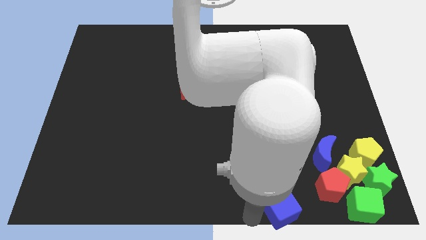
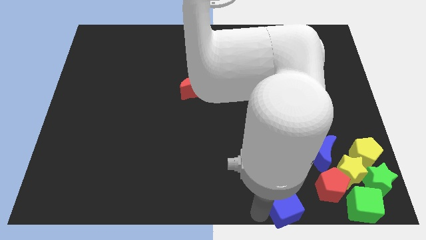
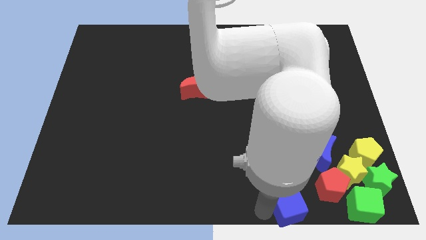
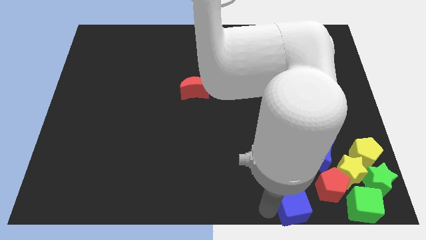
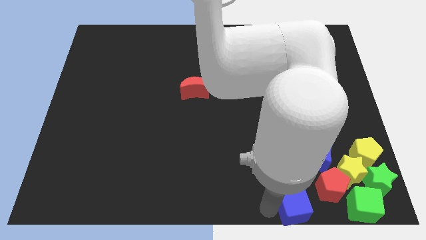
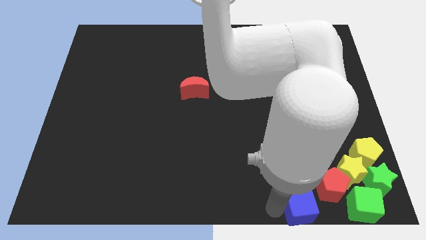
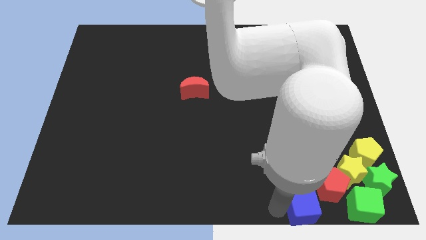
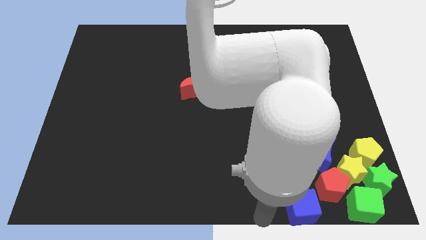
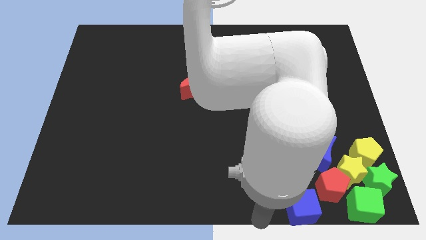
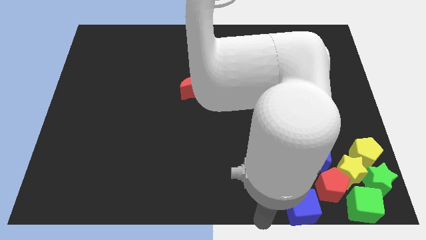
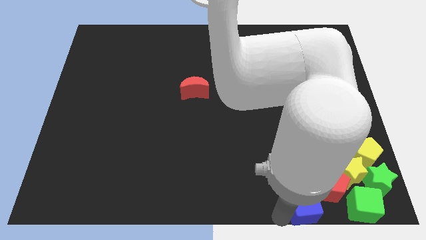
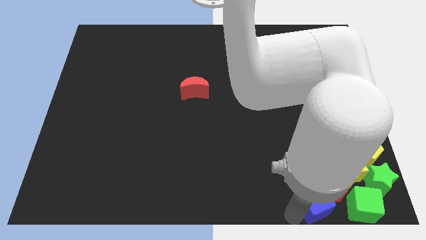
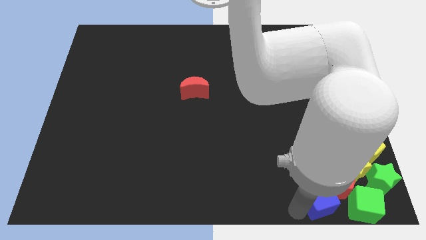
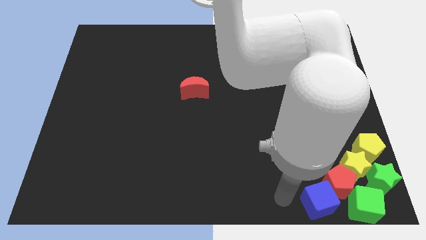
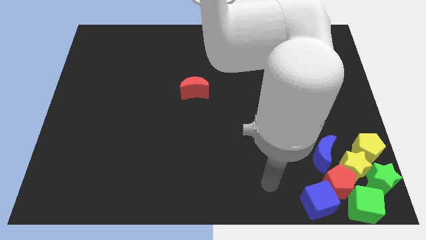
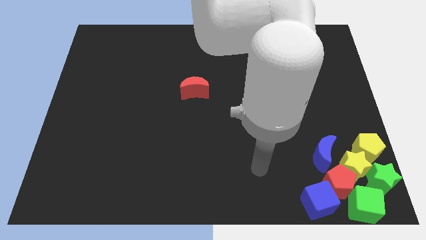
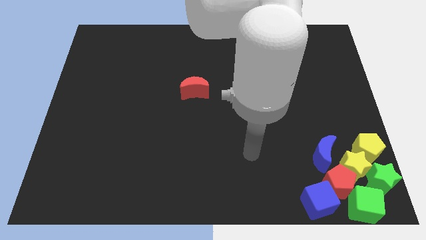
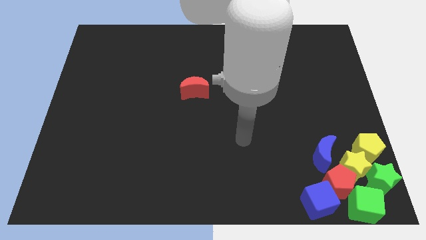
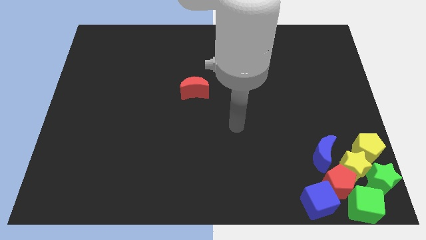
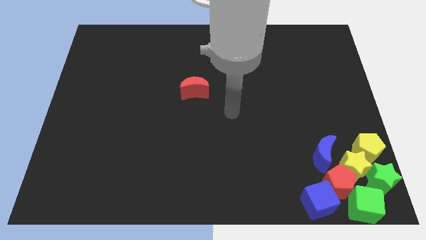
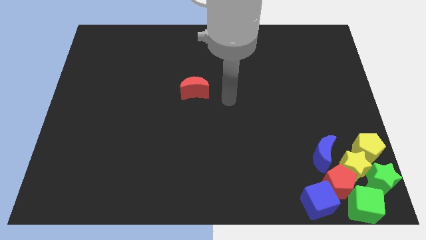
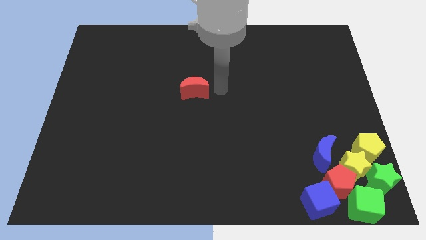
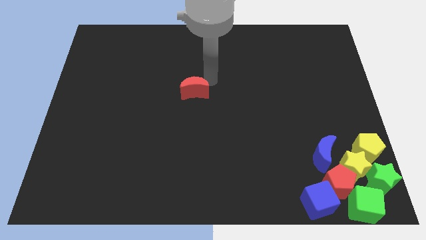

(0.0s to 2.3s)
move blue block close to red pentagon

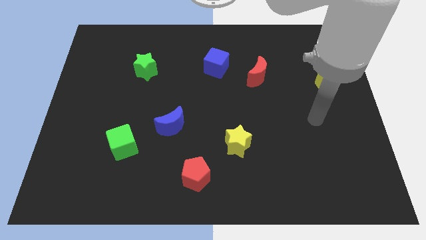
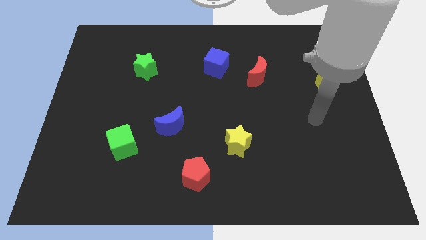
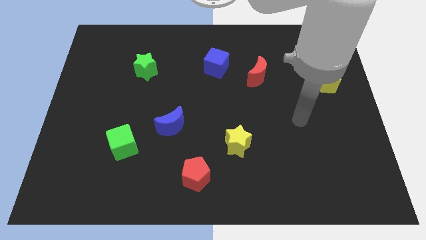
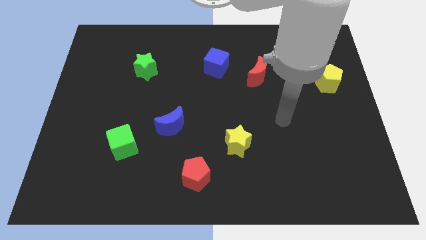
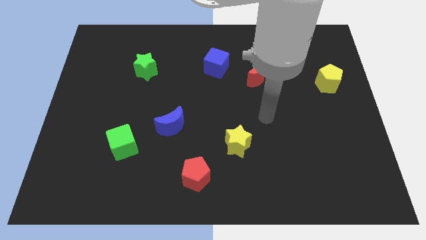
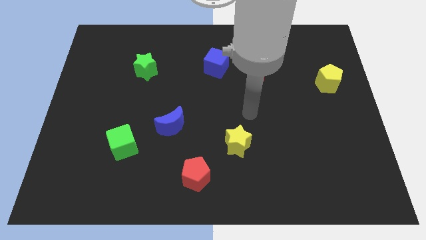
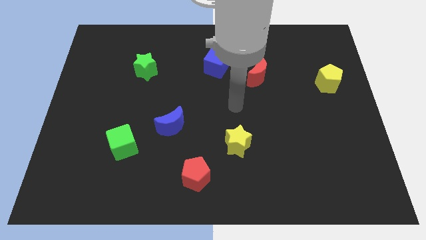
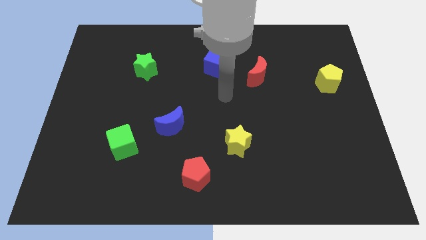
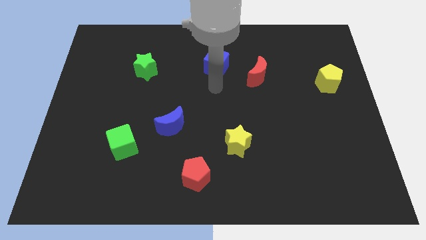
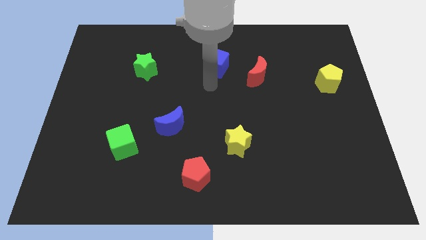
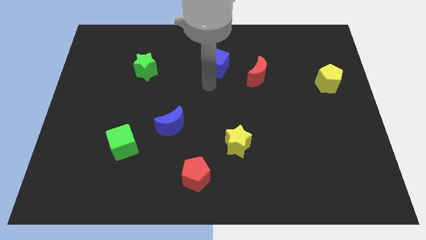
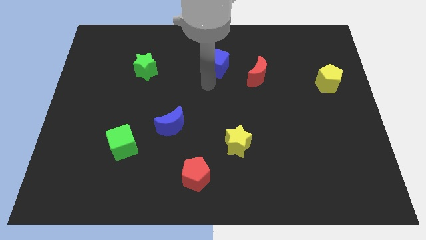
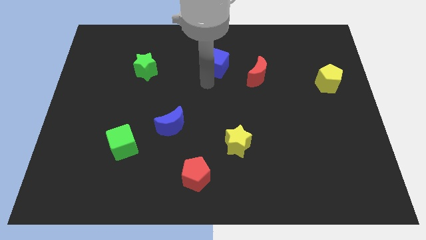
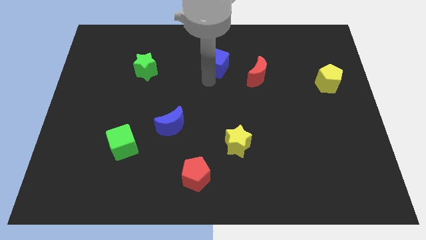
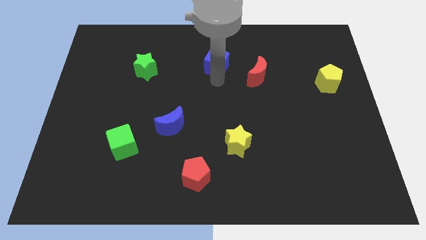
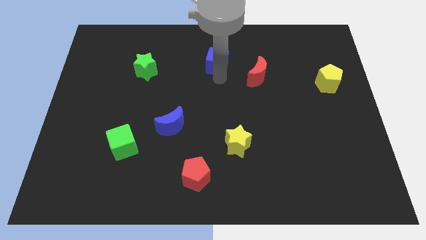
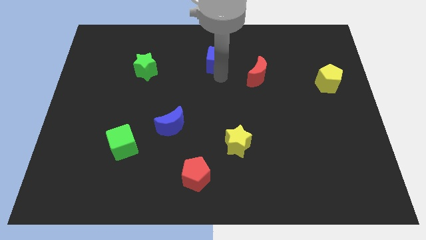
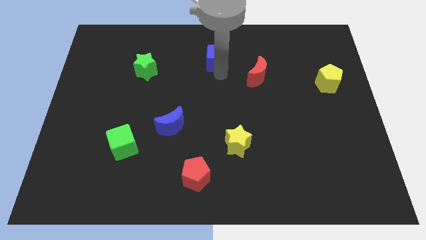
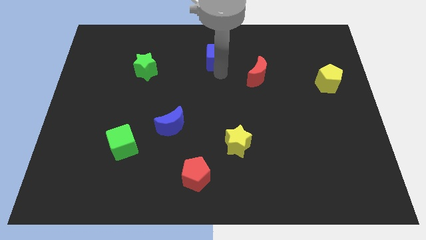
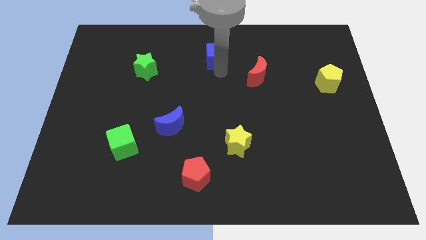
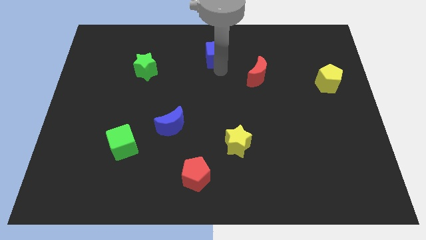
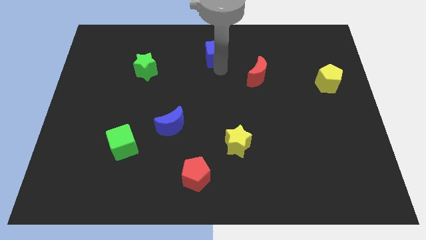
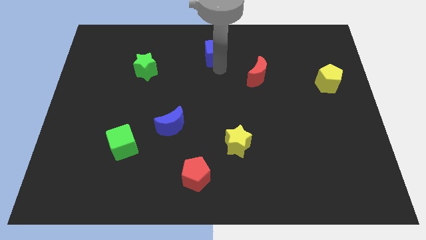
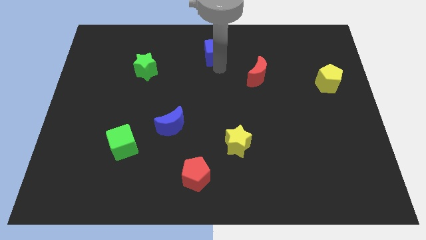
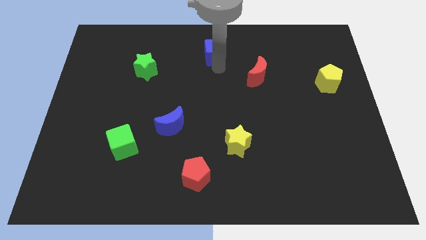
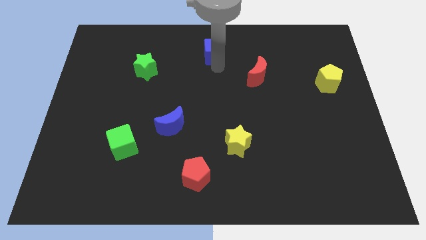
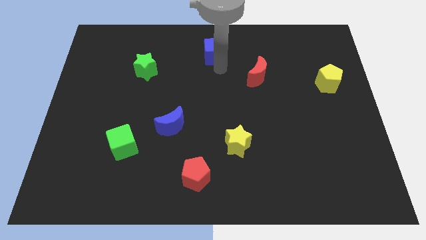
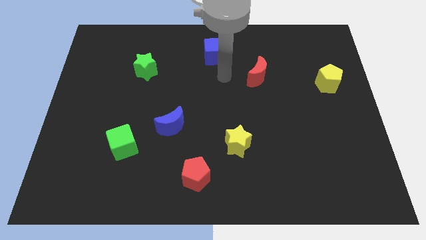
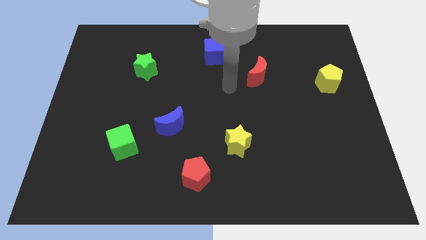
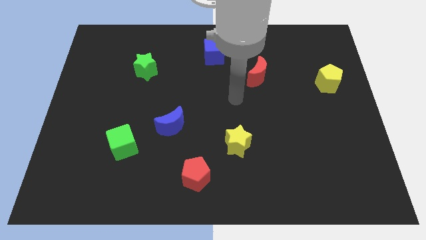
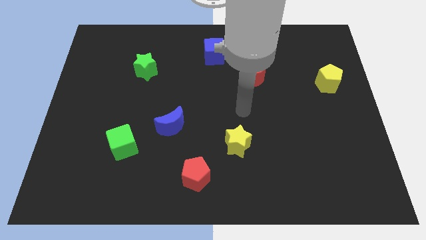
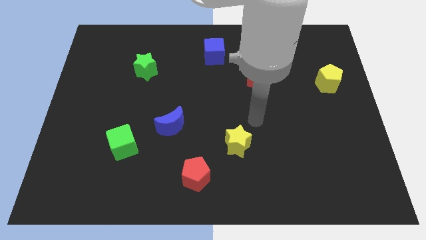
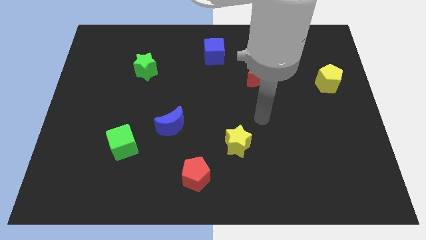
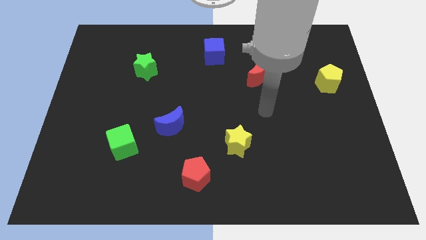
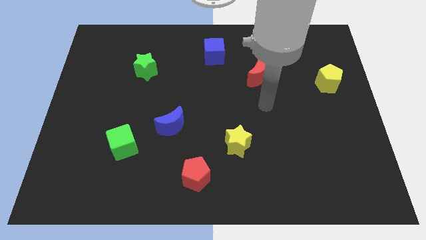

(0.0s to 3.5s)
move the blue cube to the top of the board

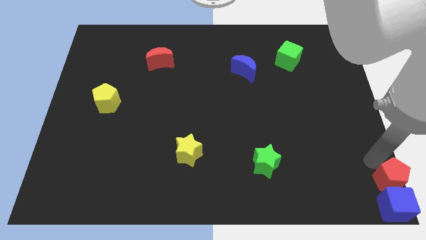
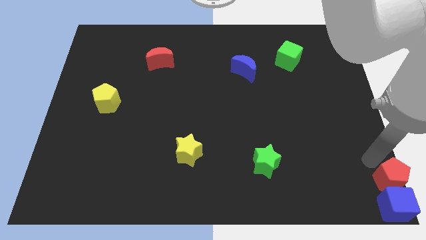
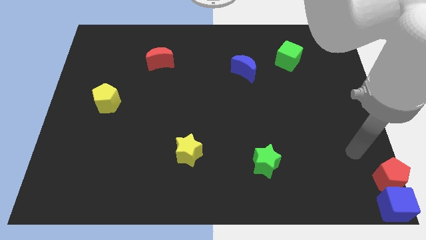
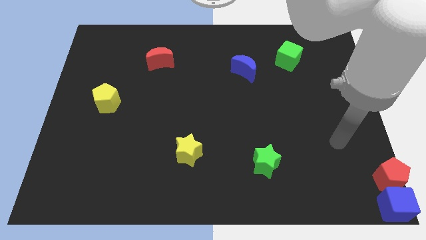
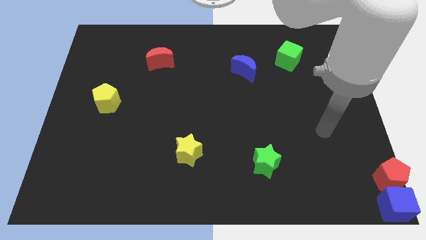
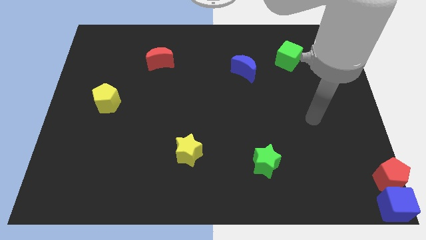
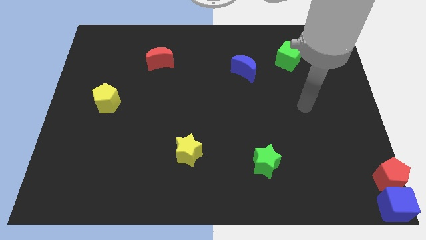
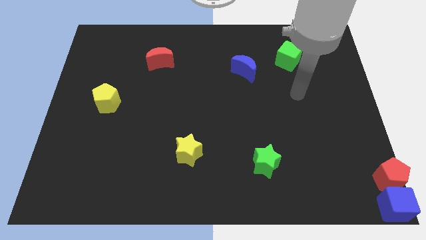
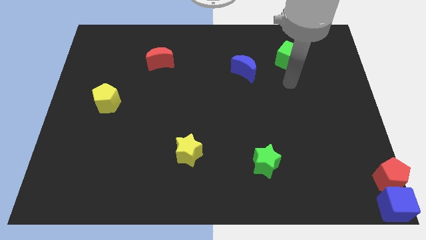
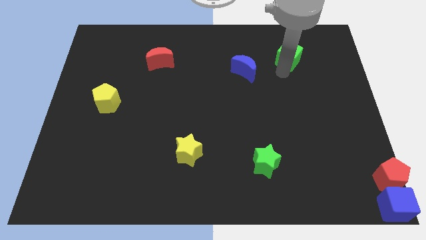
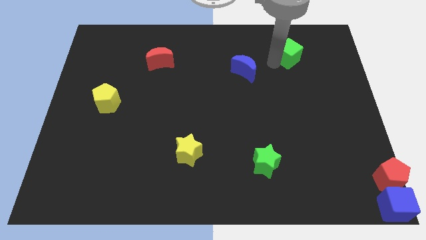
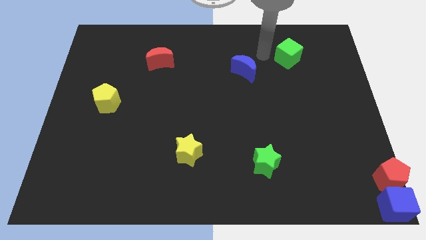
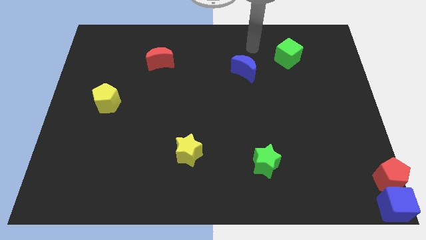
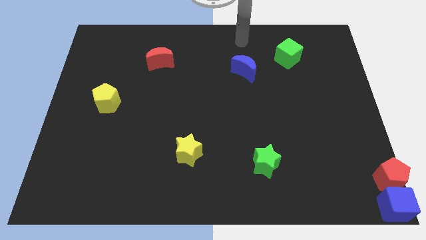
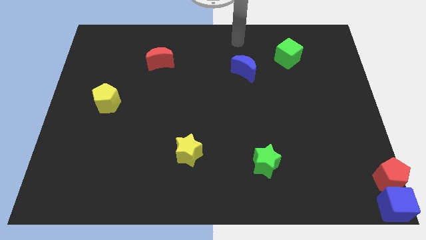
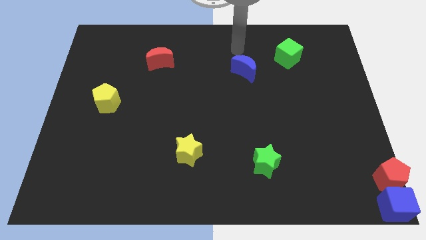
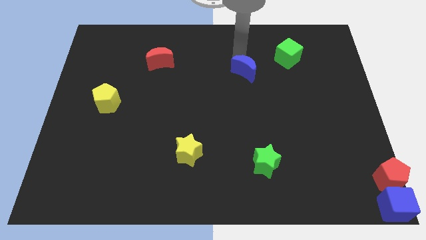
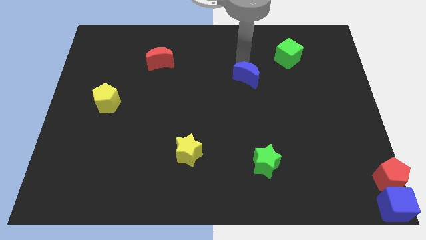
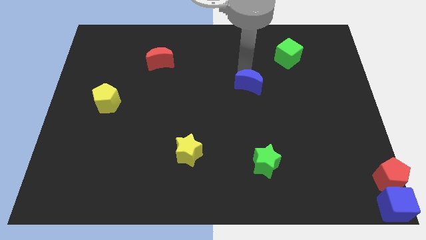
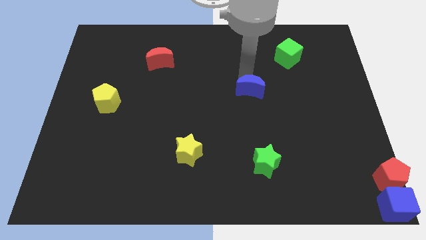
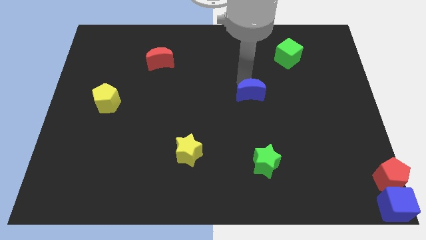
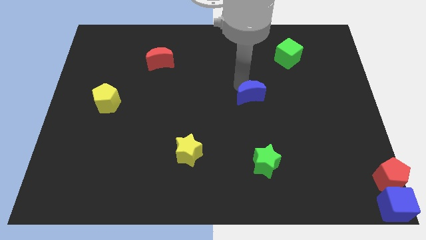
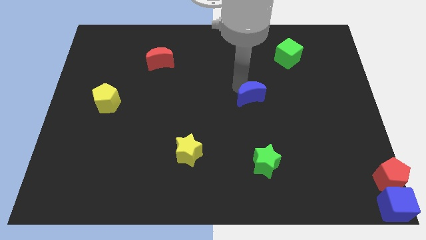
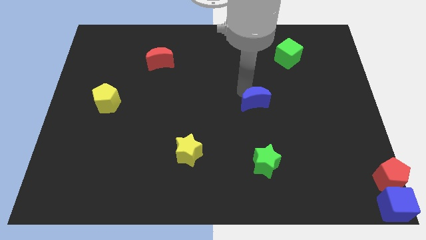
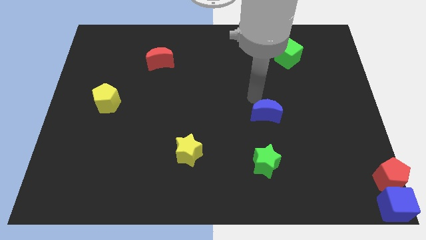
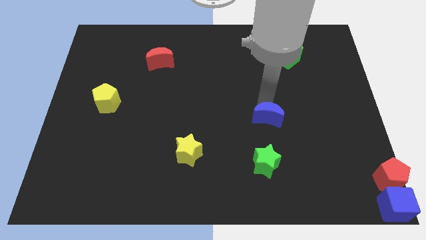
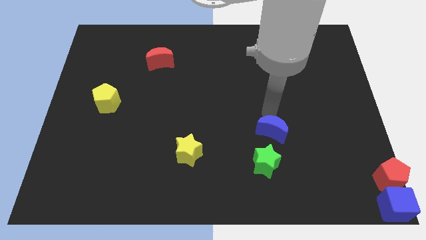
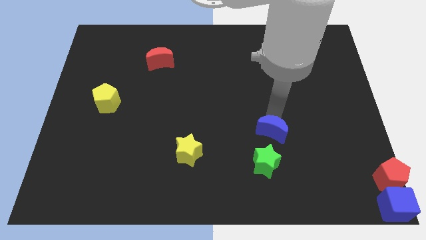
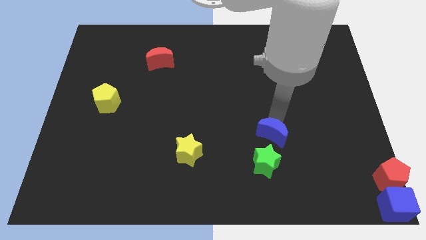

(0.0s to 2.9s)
put the blue crescent at the top of green star

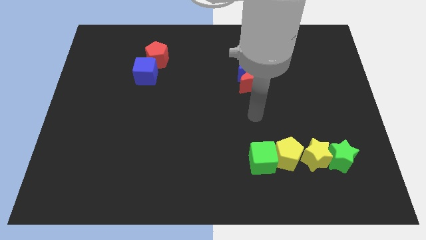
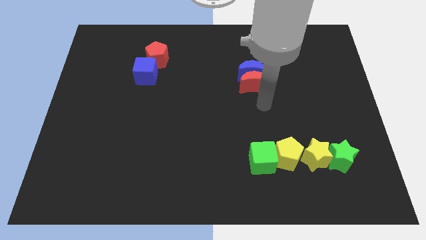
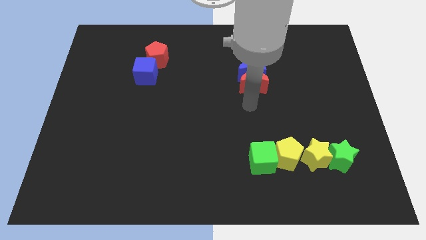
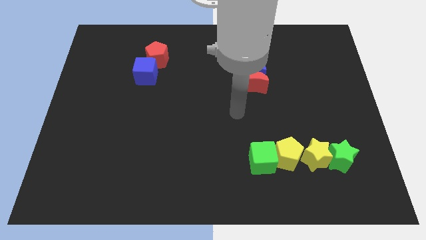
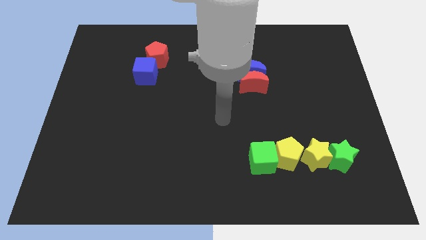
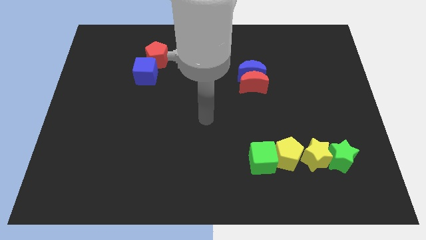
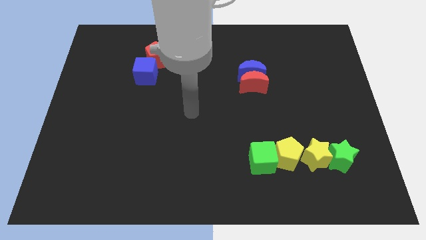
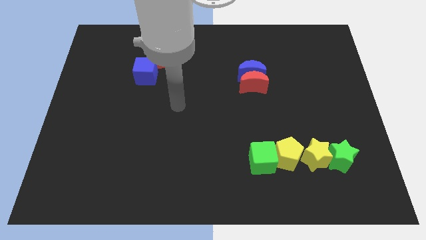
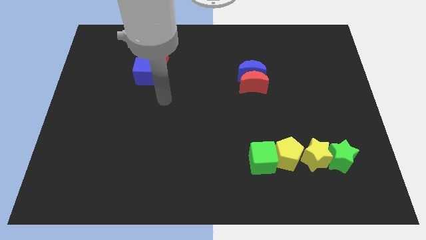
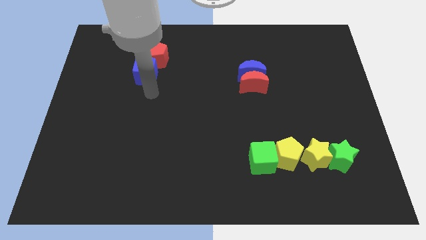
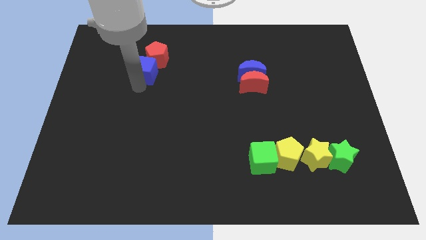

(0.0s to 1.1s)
point the arm below the blue cube
